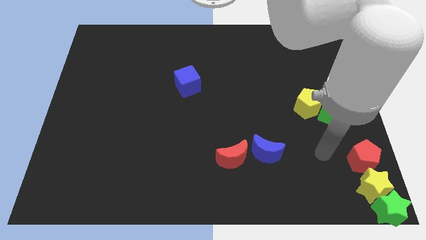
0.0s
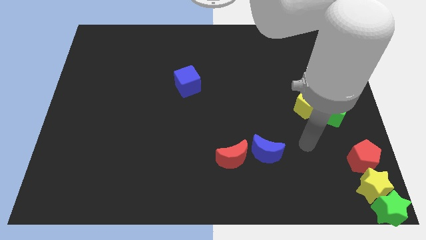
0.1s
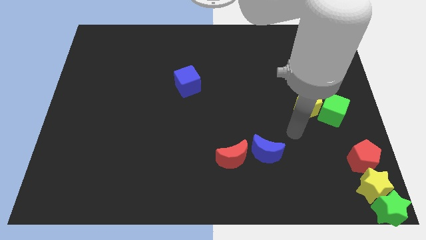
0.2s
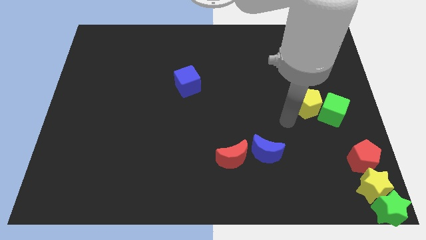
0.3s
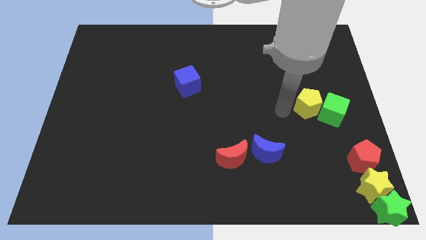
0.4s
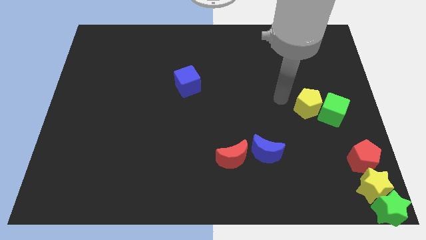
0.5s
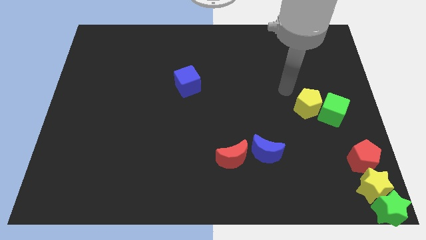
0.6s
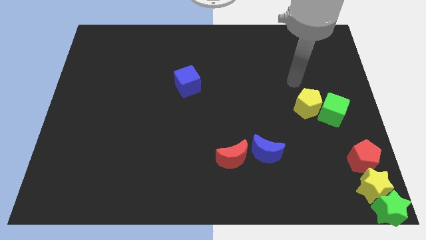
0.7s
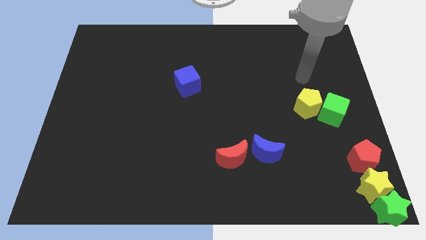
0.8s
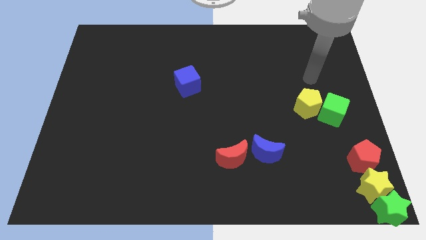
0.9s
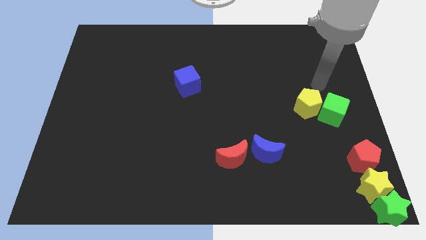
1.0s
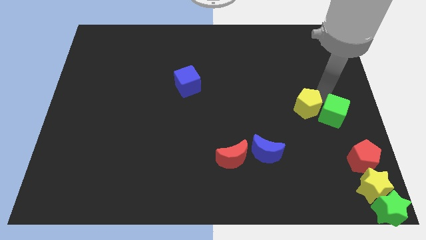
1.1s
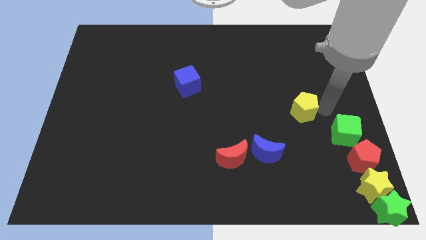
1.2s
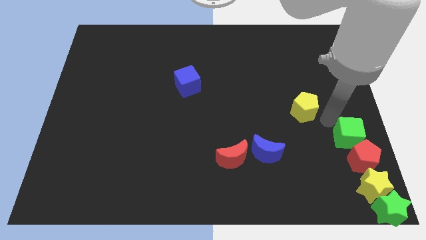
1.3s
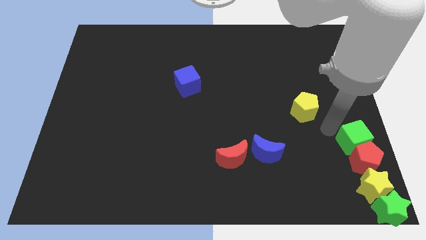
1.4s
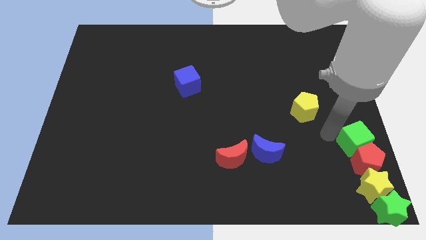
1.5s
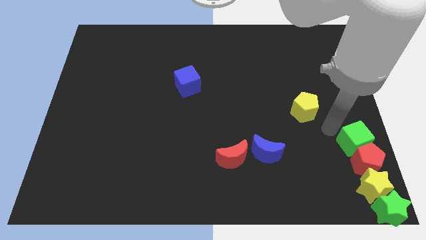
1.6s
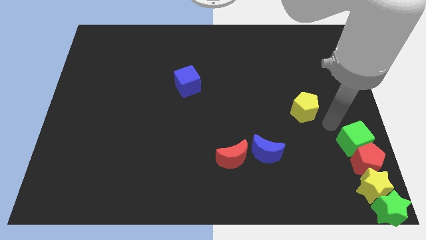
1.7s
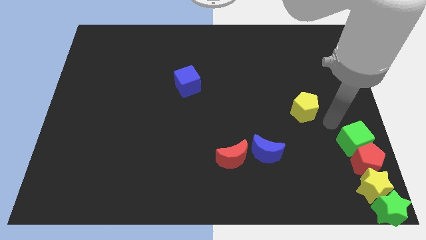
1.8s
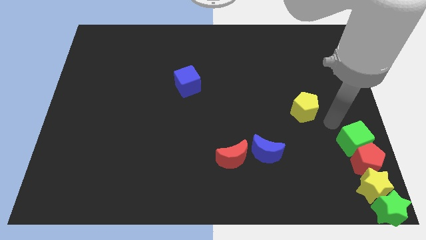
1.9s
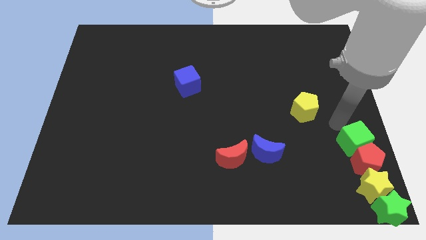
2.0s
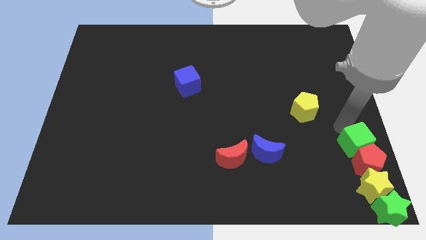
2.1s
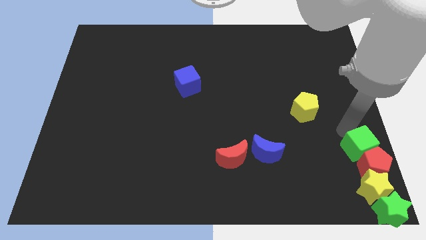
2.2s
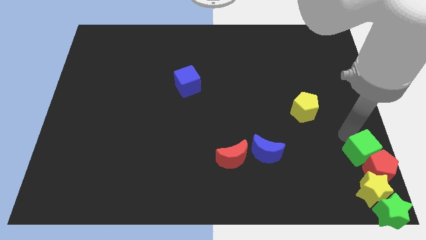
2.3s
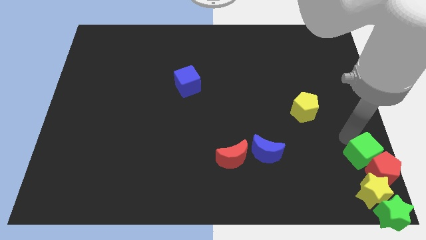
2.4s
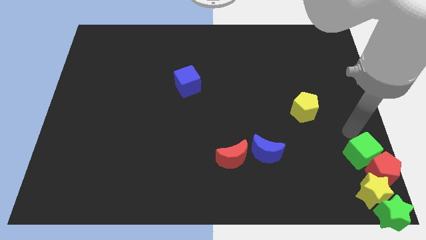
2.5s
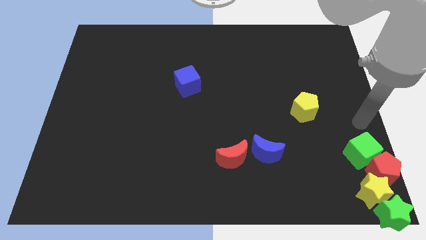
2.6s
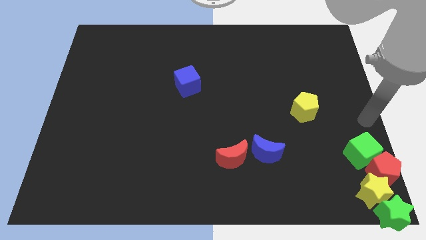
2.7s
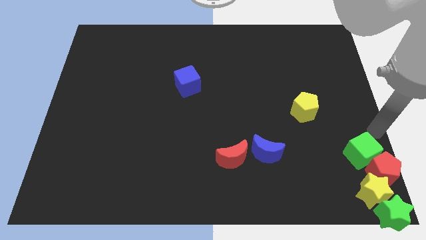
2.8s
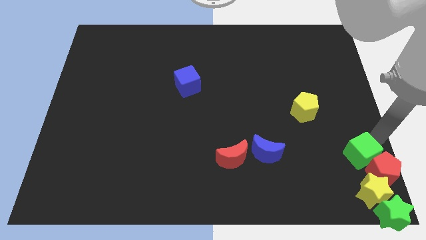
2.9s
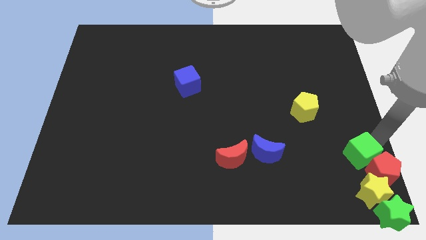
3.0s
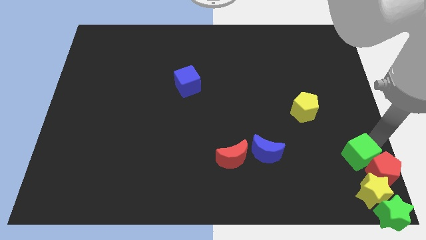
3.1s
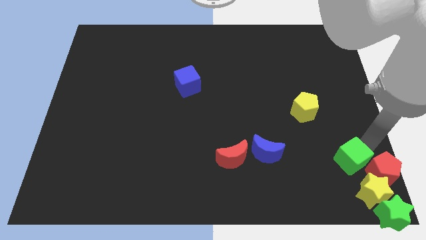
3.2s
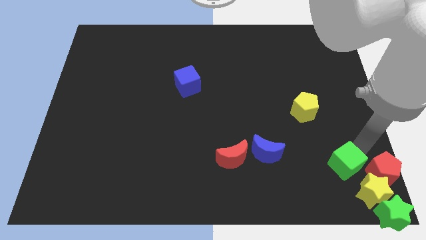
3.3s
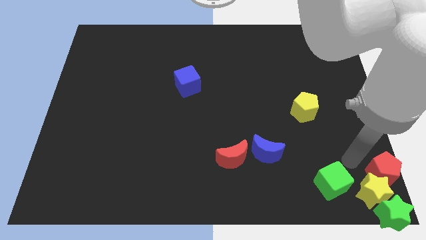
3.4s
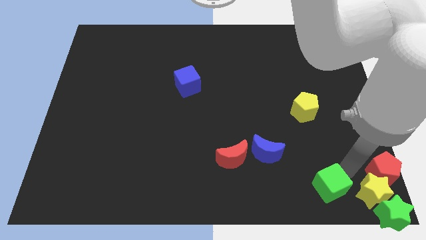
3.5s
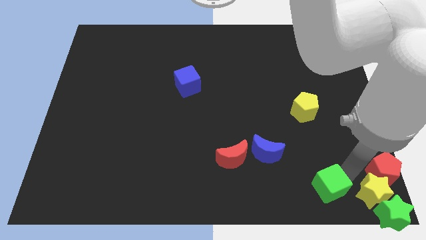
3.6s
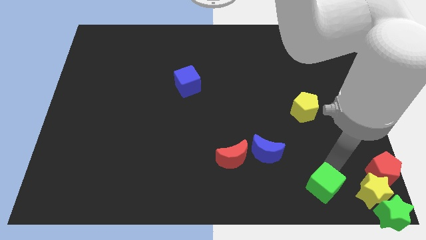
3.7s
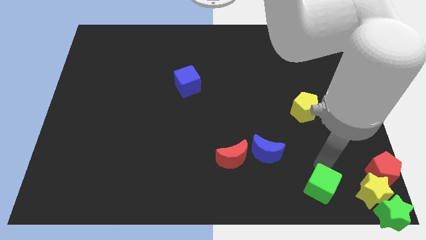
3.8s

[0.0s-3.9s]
push the green cube to the left of the yellow star

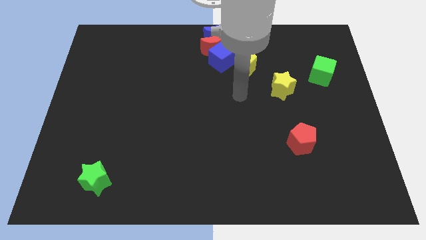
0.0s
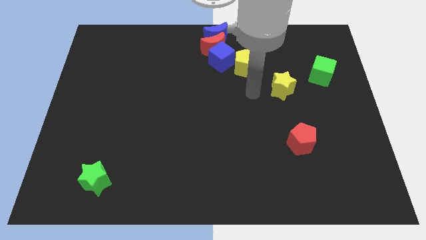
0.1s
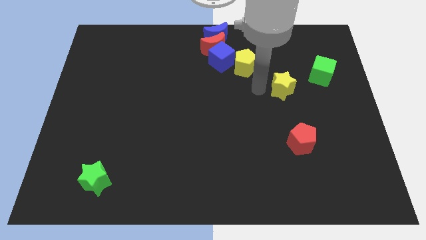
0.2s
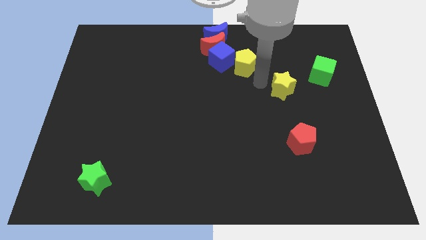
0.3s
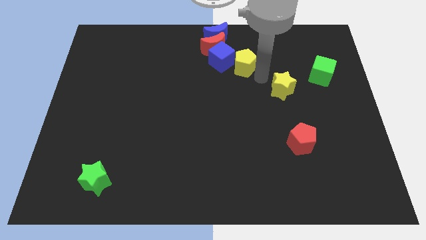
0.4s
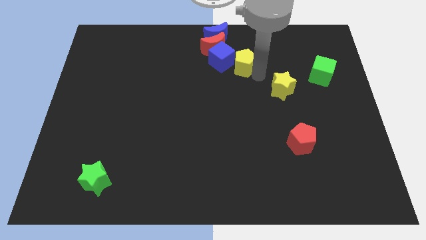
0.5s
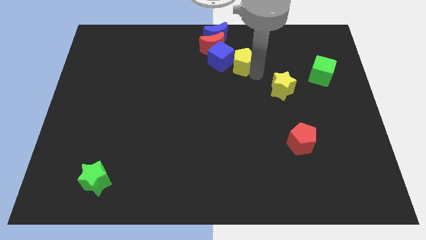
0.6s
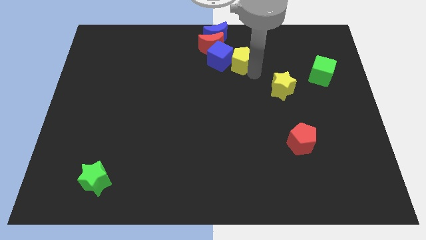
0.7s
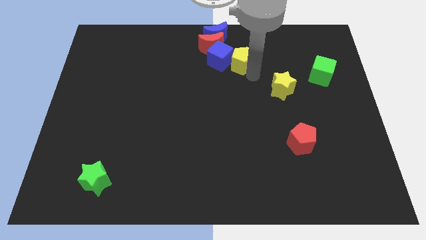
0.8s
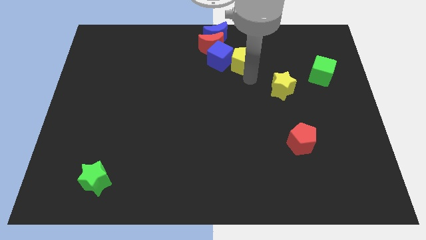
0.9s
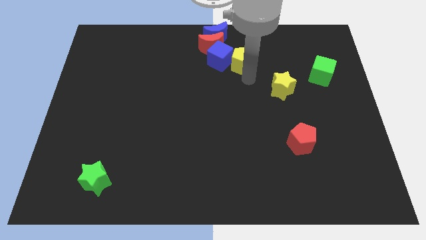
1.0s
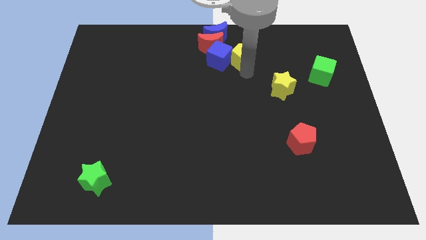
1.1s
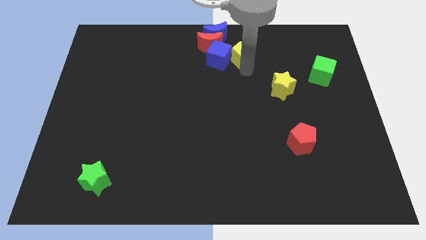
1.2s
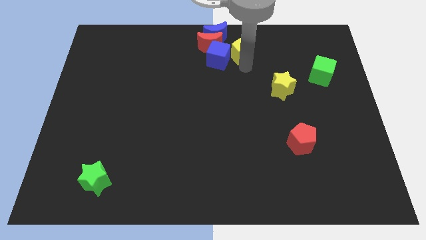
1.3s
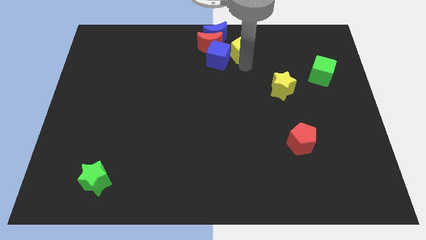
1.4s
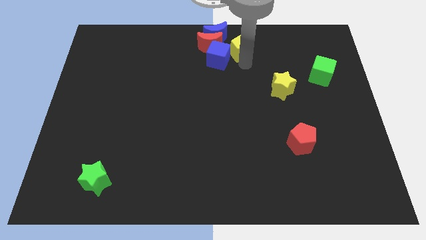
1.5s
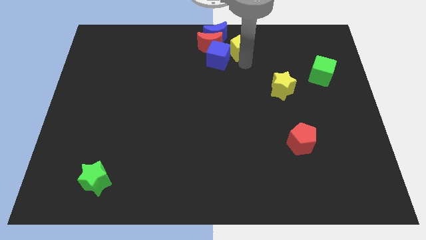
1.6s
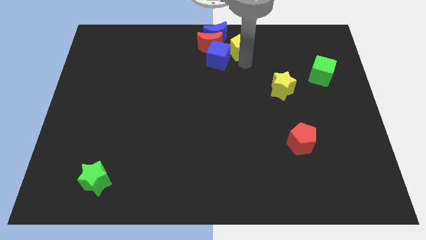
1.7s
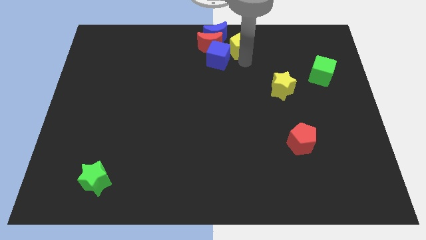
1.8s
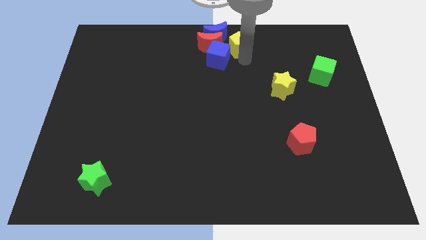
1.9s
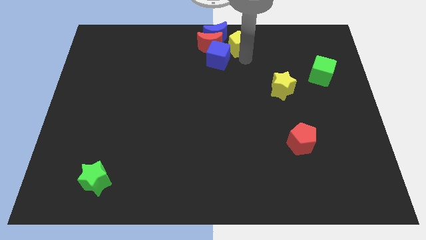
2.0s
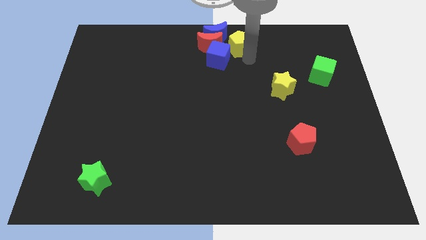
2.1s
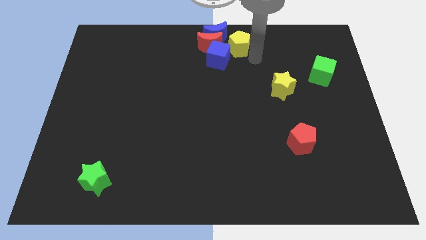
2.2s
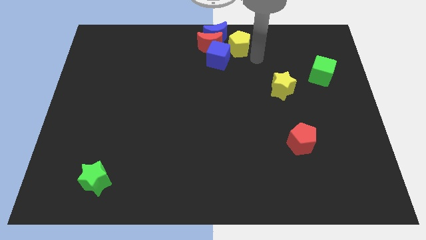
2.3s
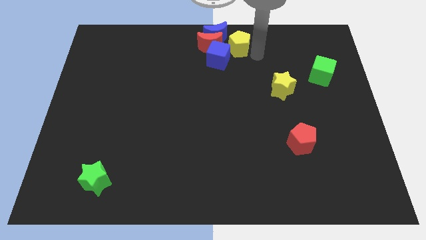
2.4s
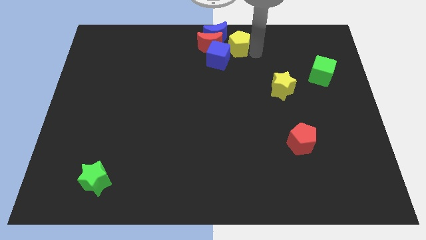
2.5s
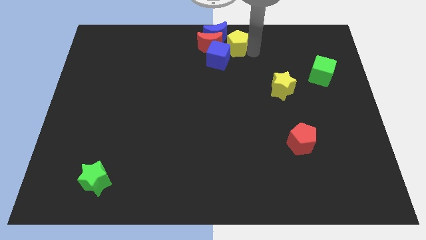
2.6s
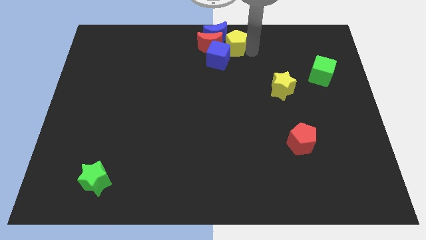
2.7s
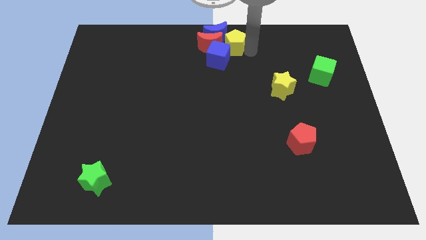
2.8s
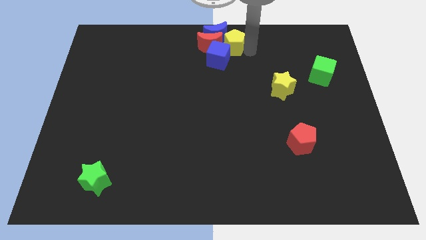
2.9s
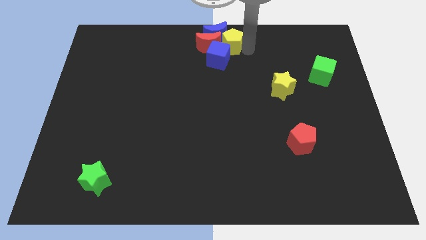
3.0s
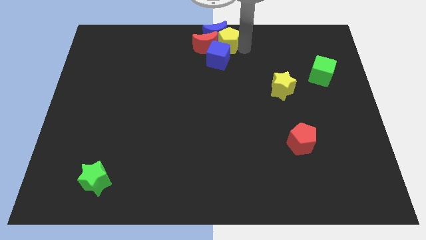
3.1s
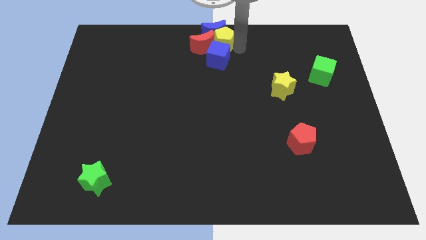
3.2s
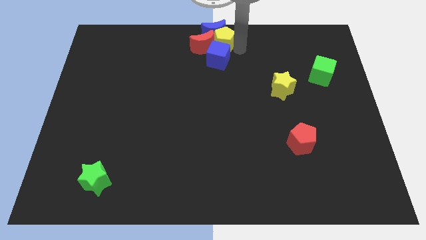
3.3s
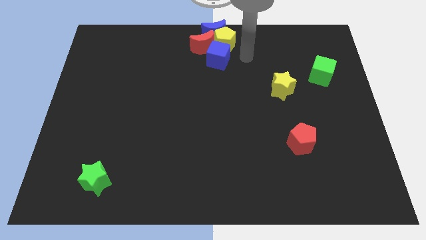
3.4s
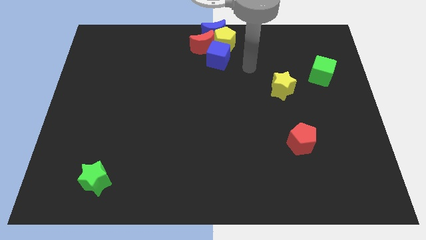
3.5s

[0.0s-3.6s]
move the yellow pentagon into the red moon

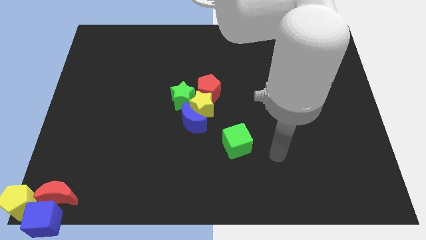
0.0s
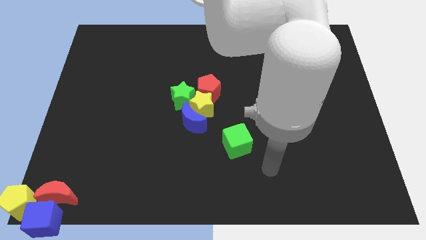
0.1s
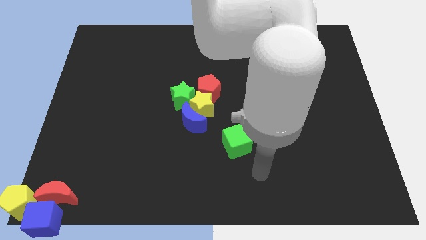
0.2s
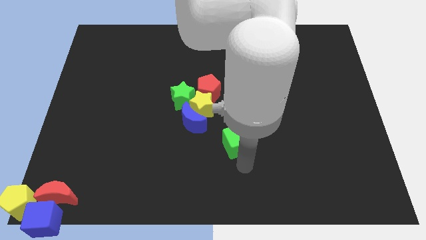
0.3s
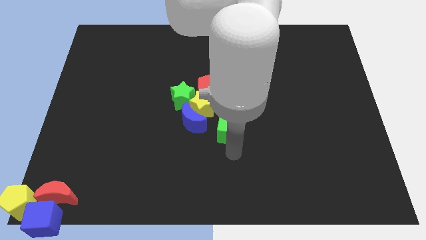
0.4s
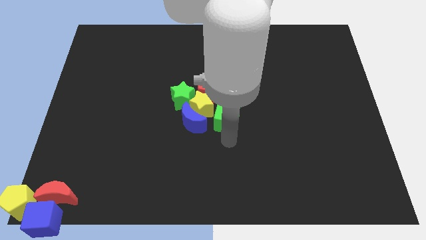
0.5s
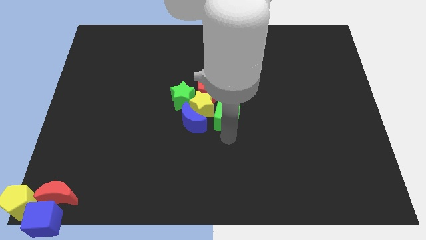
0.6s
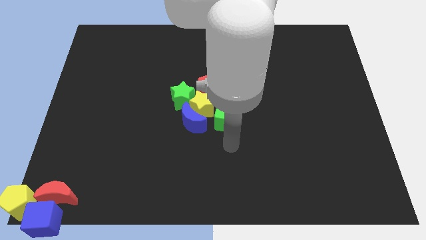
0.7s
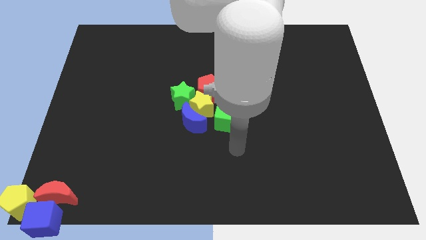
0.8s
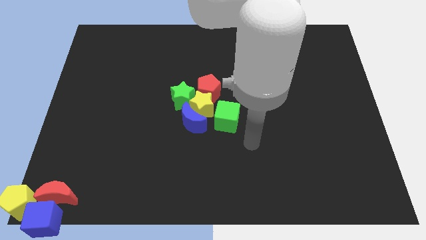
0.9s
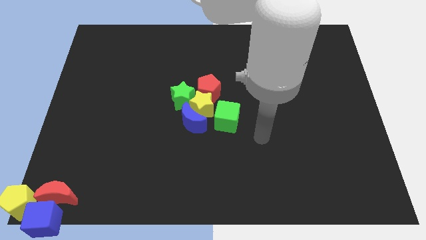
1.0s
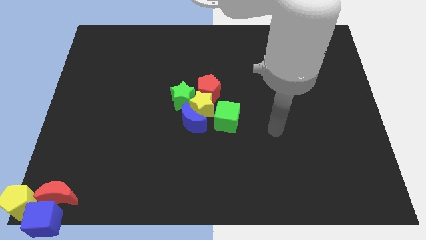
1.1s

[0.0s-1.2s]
move the green cube to the right of the yellow star

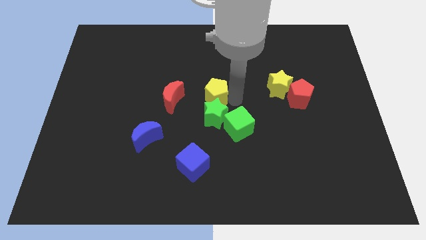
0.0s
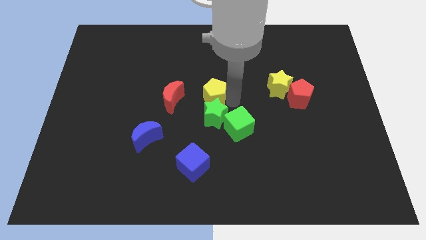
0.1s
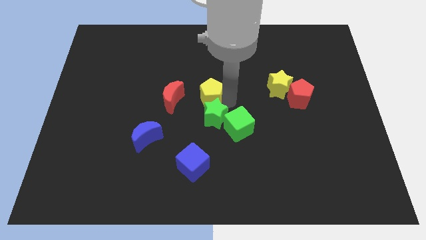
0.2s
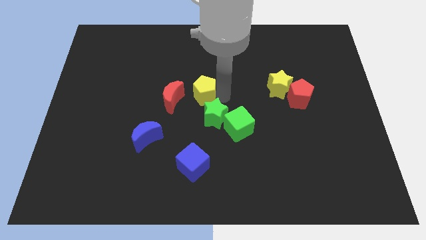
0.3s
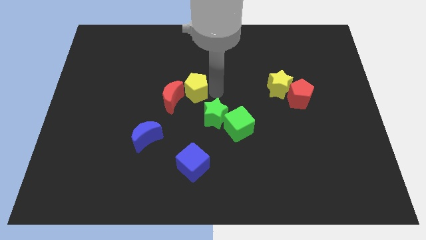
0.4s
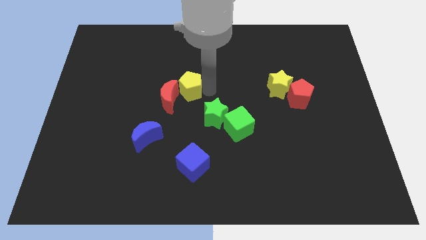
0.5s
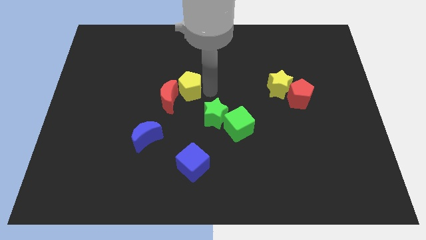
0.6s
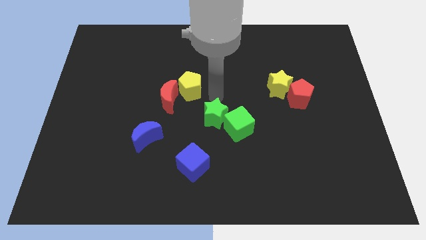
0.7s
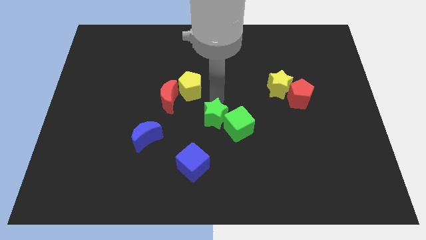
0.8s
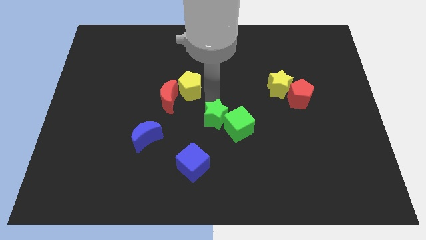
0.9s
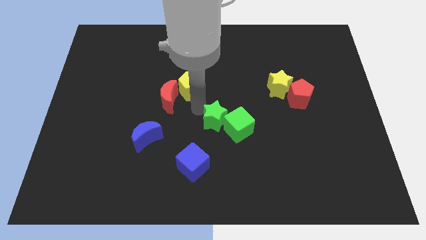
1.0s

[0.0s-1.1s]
move yellow pentagon close to the red crescent
